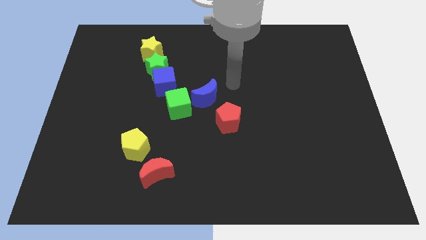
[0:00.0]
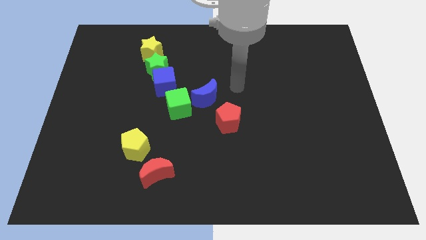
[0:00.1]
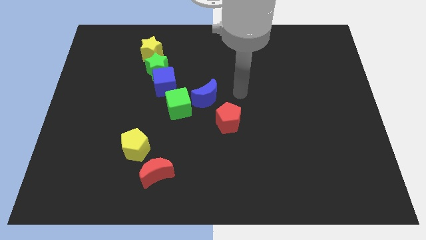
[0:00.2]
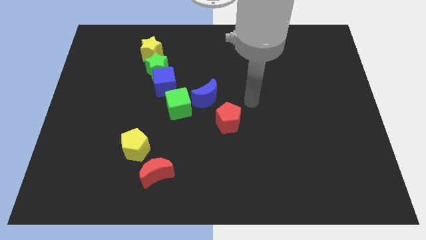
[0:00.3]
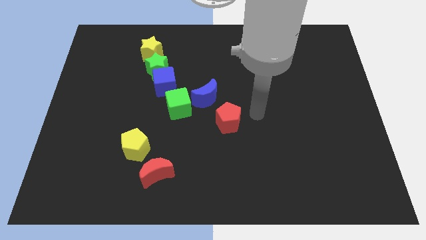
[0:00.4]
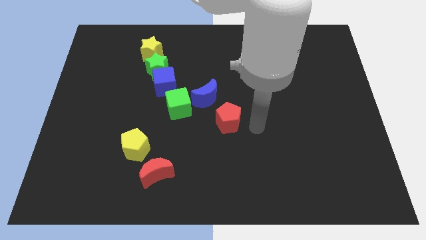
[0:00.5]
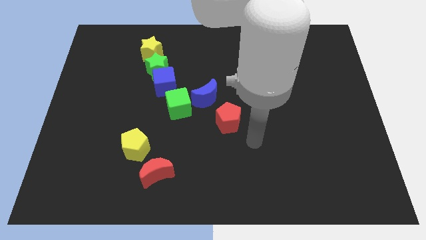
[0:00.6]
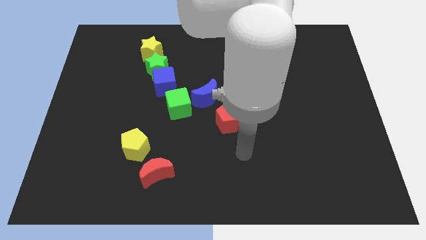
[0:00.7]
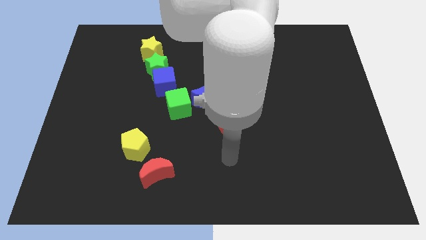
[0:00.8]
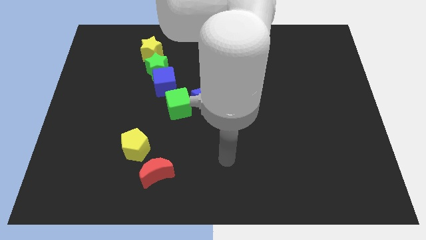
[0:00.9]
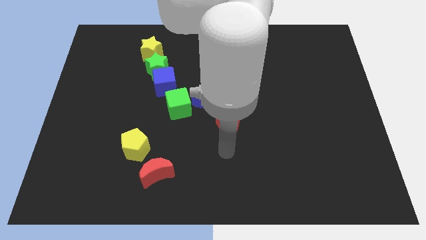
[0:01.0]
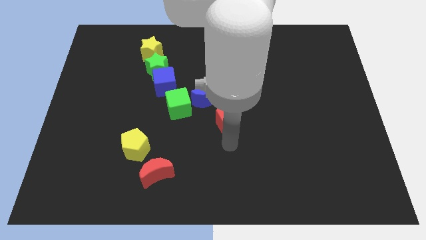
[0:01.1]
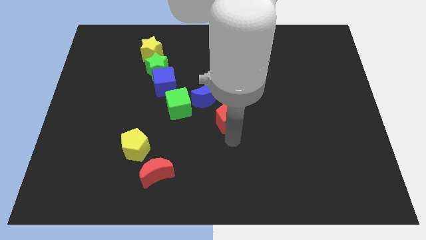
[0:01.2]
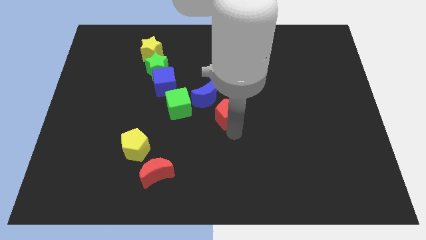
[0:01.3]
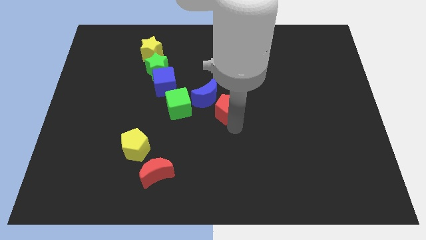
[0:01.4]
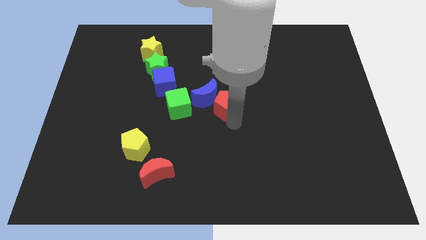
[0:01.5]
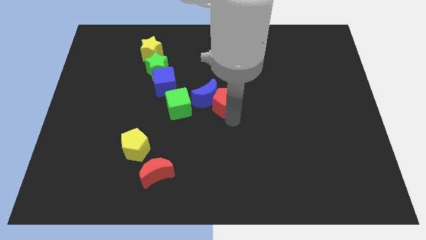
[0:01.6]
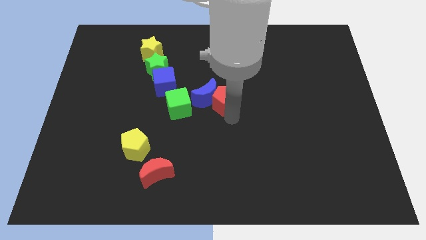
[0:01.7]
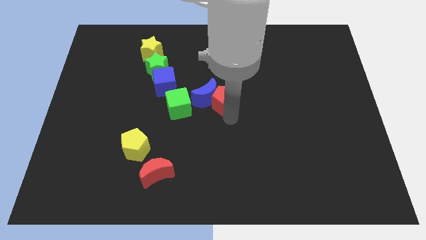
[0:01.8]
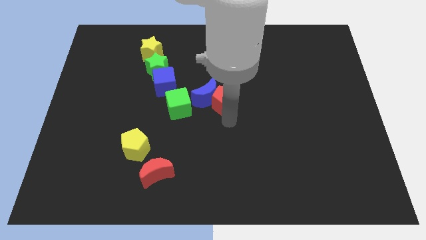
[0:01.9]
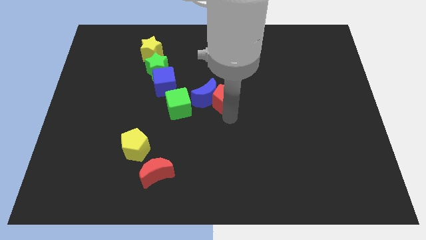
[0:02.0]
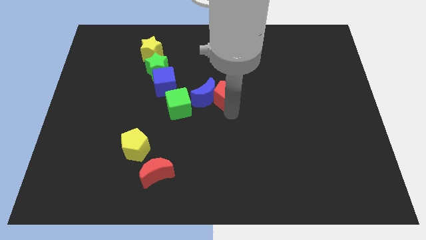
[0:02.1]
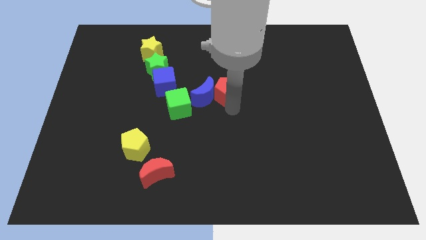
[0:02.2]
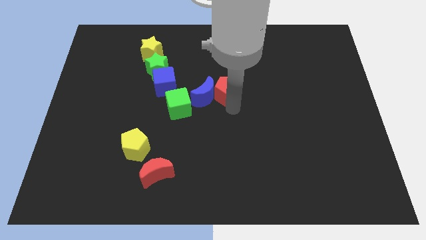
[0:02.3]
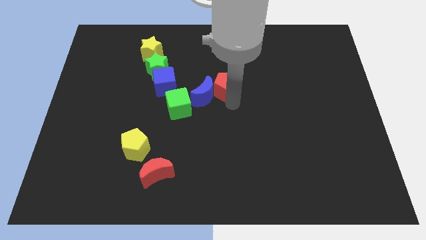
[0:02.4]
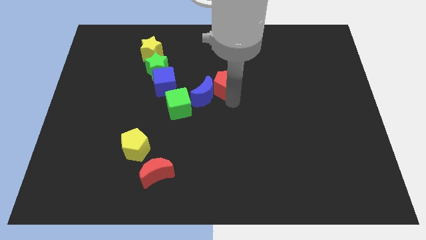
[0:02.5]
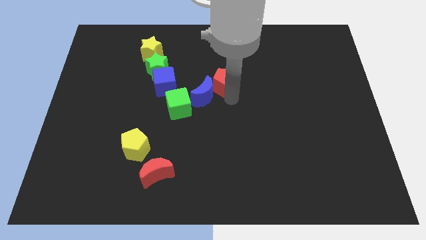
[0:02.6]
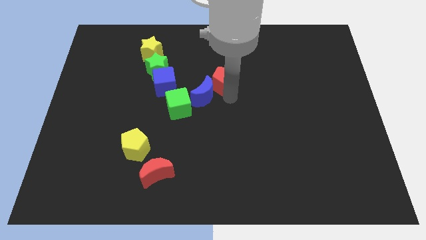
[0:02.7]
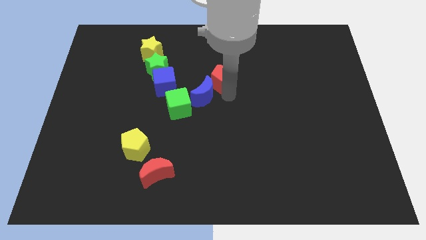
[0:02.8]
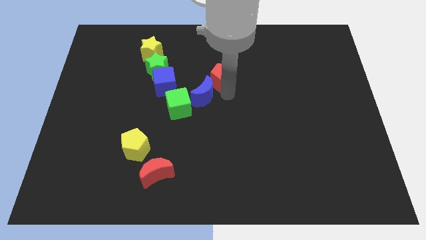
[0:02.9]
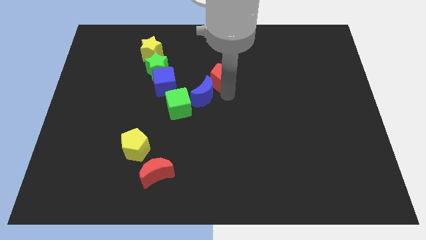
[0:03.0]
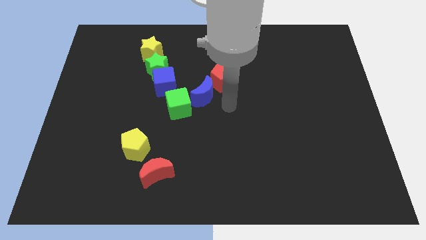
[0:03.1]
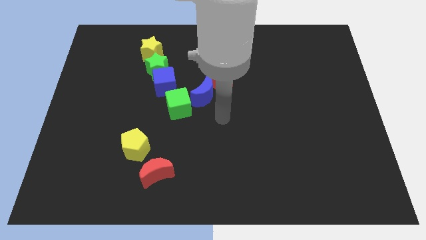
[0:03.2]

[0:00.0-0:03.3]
place the red pentagon right to the blue moon

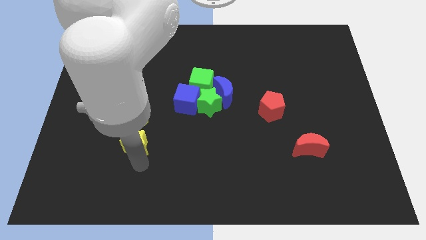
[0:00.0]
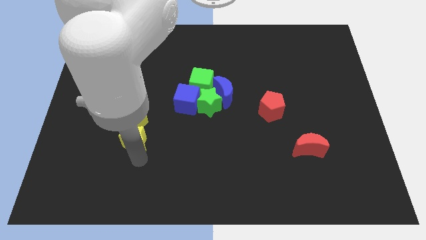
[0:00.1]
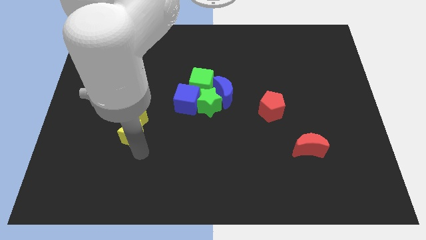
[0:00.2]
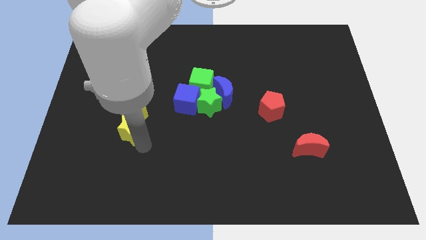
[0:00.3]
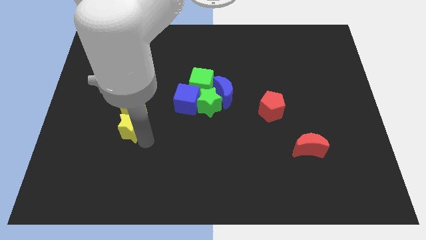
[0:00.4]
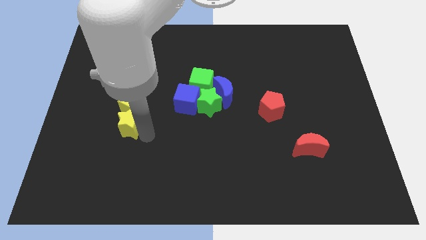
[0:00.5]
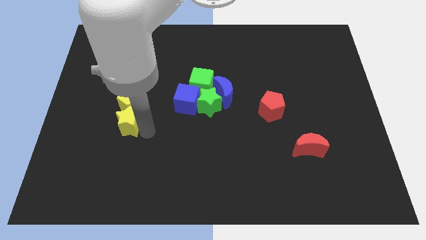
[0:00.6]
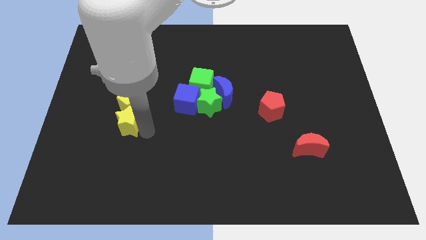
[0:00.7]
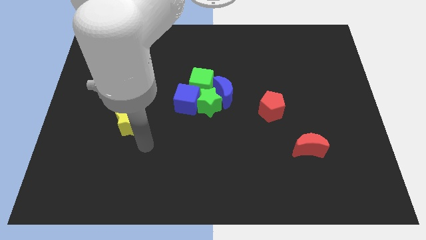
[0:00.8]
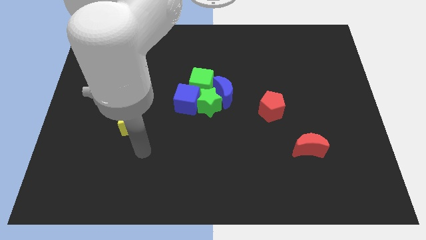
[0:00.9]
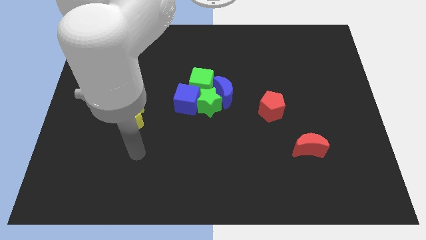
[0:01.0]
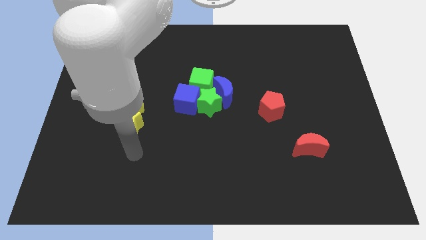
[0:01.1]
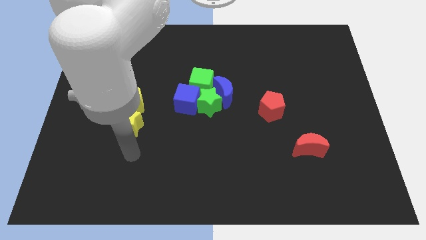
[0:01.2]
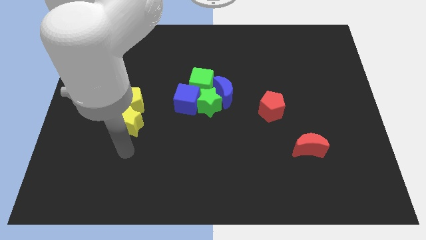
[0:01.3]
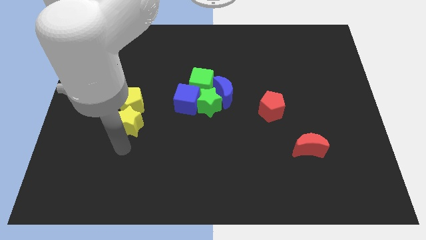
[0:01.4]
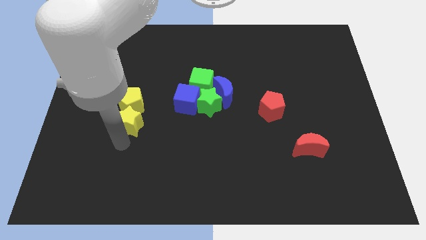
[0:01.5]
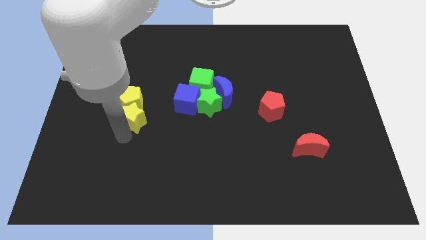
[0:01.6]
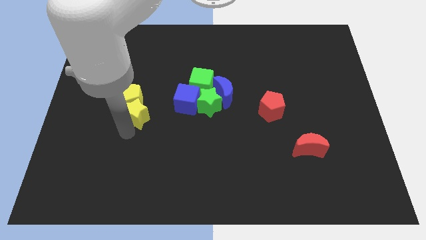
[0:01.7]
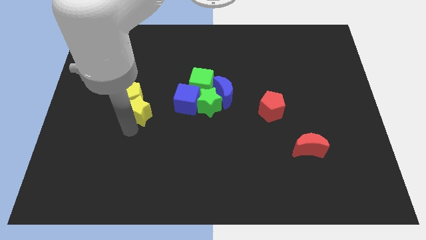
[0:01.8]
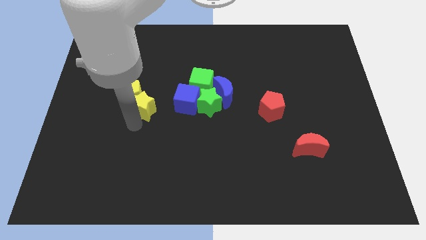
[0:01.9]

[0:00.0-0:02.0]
push the yellow blocks to the top of the board

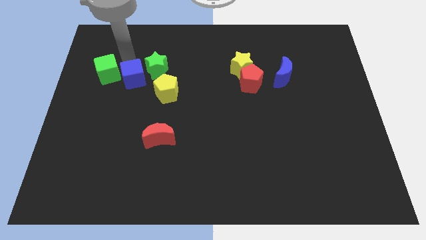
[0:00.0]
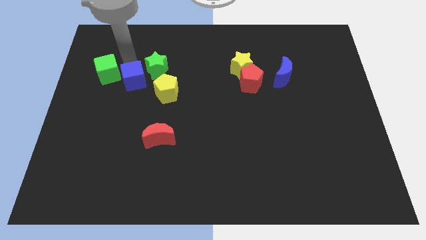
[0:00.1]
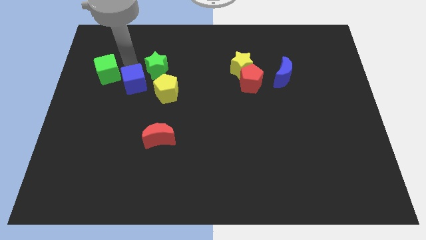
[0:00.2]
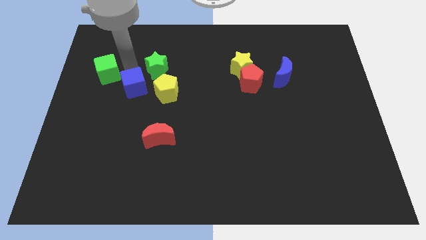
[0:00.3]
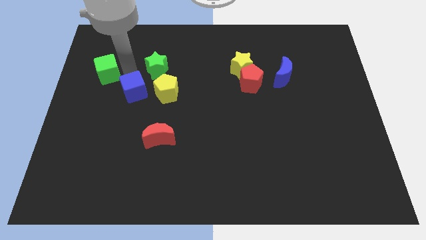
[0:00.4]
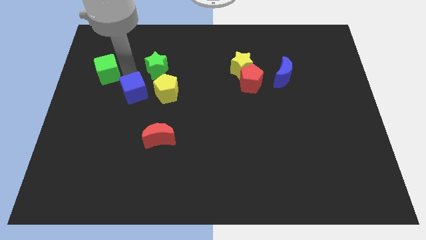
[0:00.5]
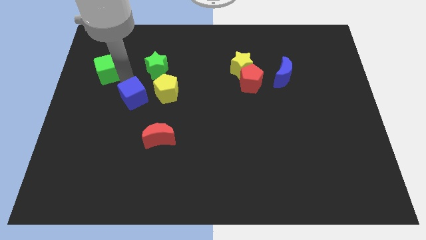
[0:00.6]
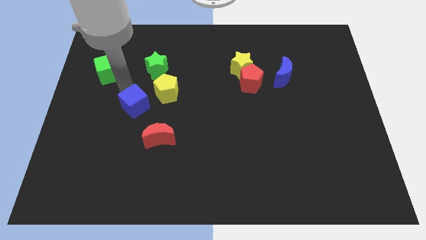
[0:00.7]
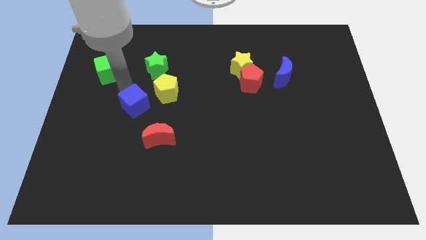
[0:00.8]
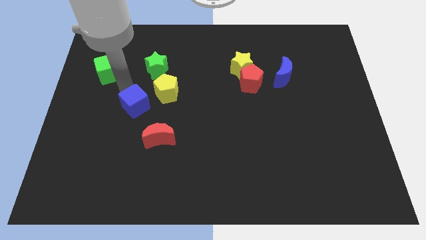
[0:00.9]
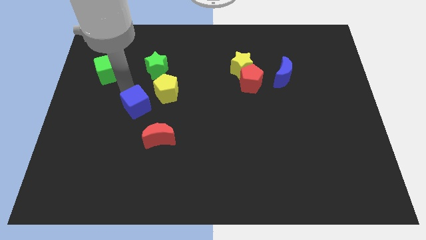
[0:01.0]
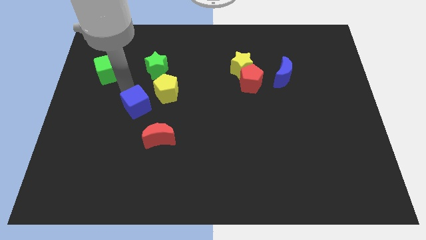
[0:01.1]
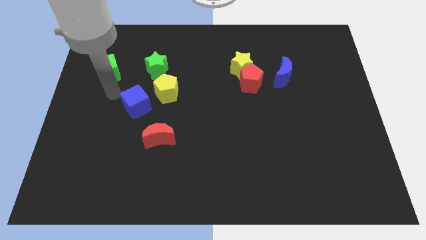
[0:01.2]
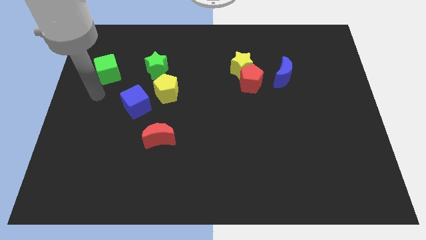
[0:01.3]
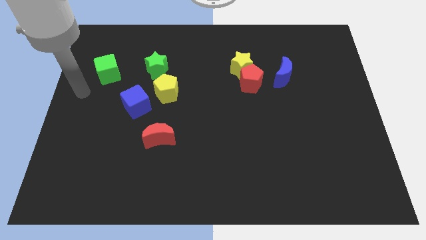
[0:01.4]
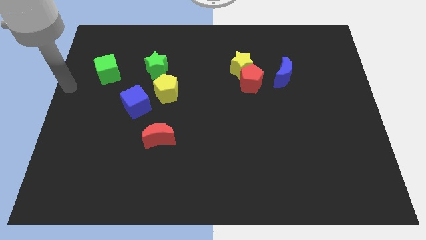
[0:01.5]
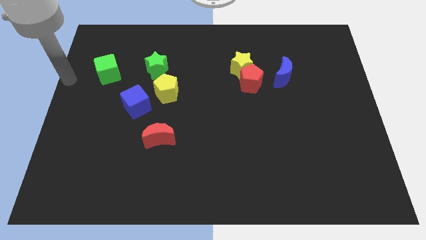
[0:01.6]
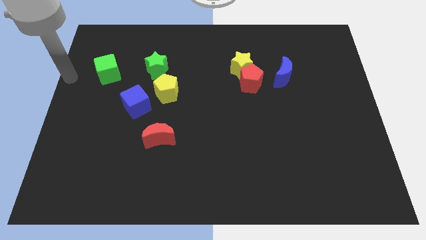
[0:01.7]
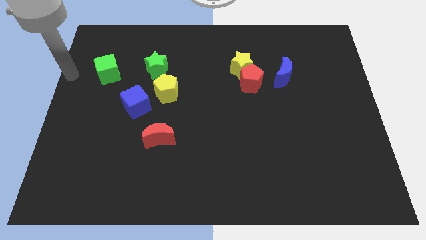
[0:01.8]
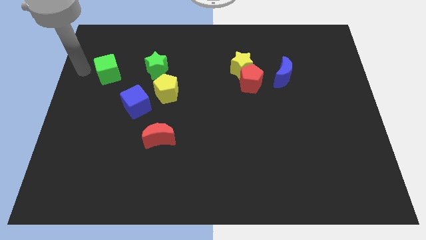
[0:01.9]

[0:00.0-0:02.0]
place the blue cube to the left of the yellow pentagon and the red crescent to form a triangle

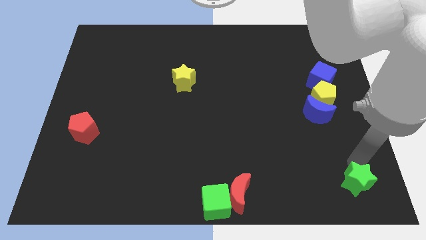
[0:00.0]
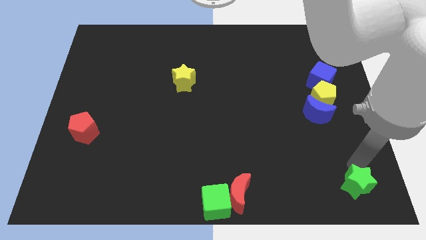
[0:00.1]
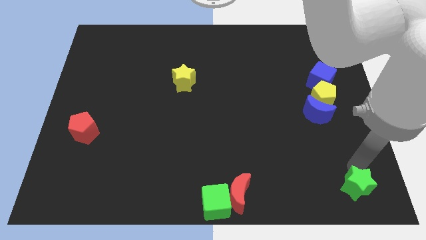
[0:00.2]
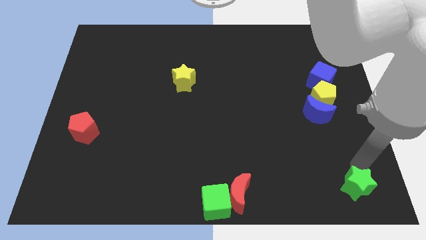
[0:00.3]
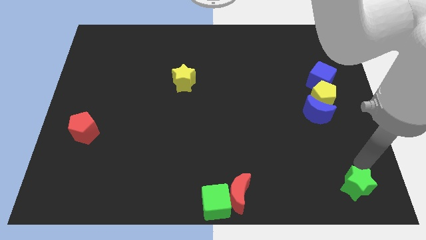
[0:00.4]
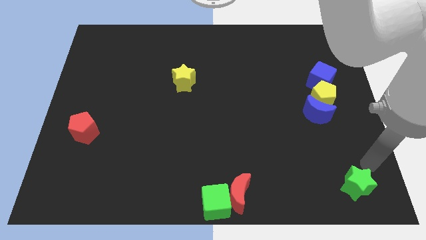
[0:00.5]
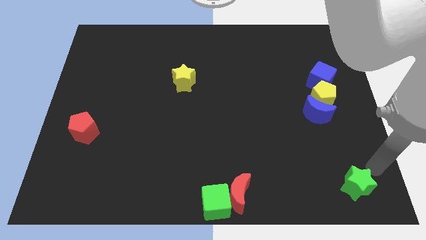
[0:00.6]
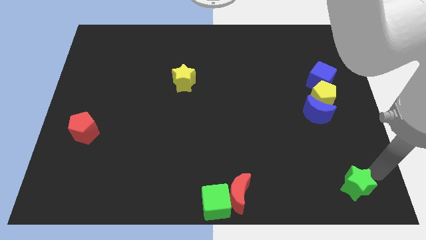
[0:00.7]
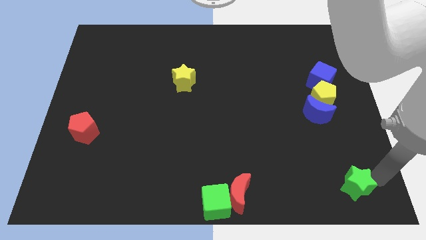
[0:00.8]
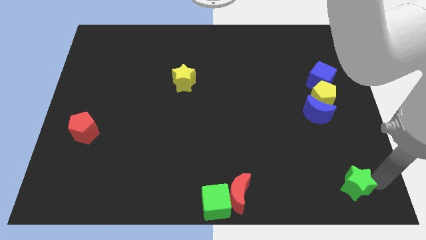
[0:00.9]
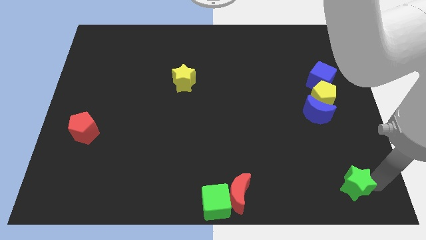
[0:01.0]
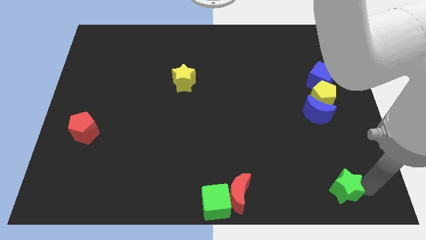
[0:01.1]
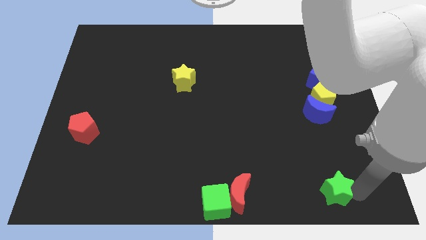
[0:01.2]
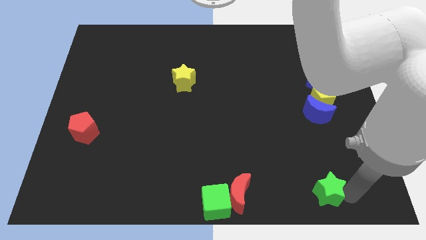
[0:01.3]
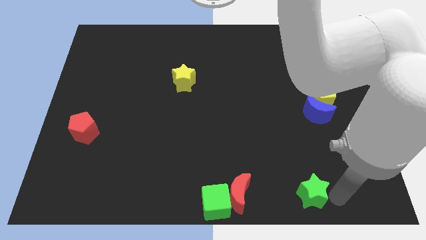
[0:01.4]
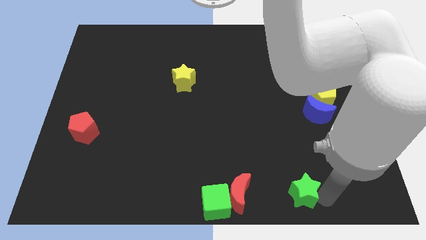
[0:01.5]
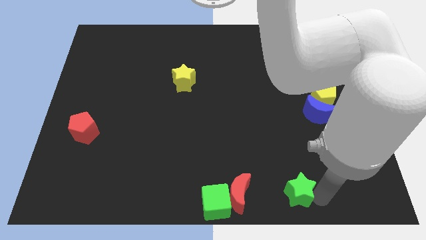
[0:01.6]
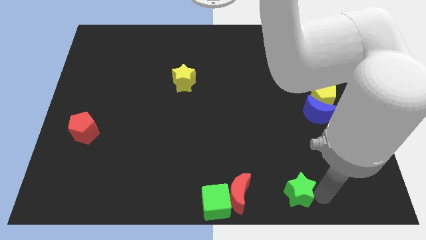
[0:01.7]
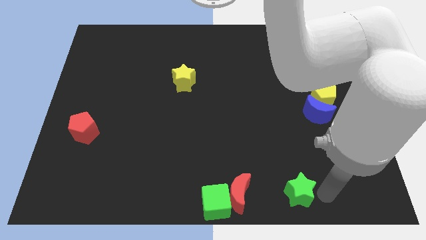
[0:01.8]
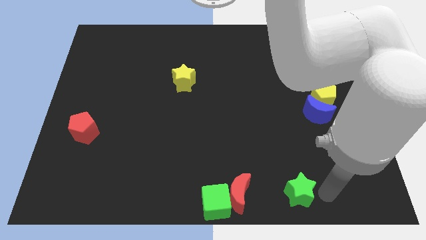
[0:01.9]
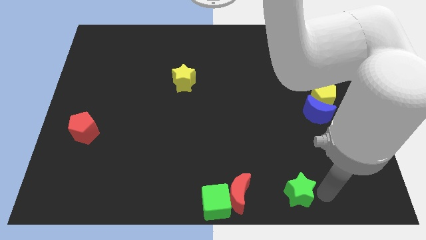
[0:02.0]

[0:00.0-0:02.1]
move the green star towards the red moon
